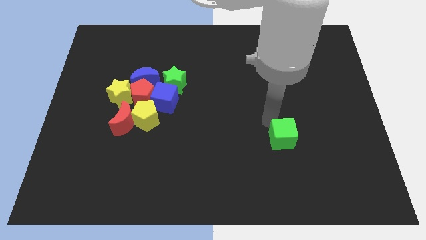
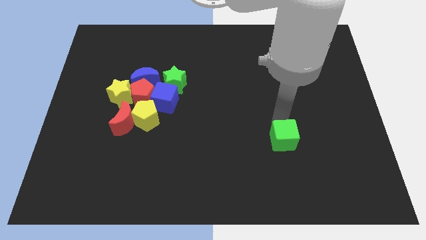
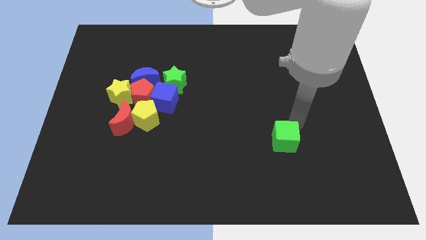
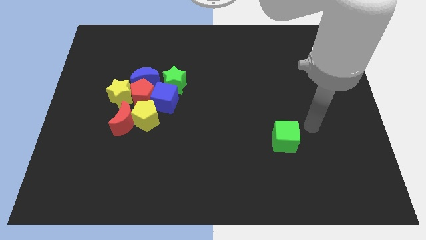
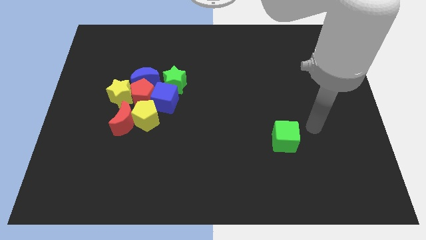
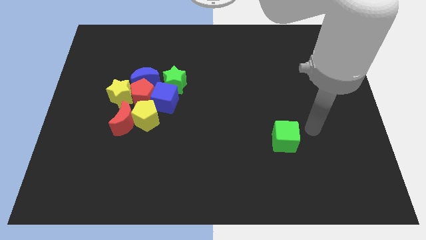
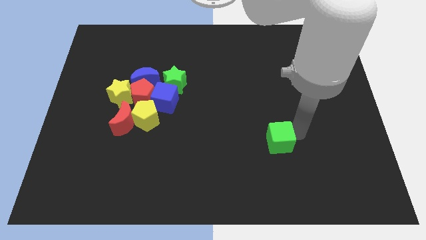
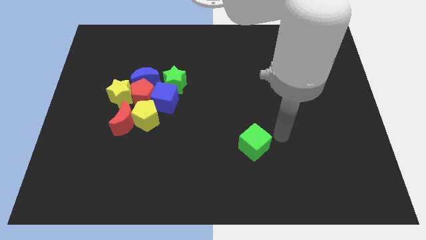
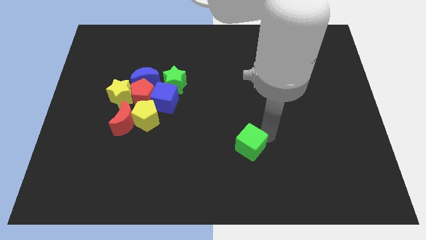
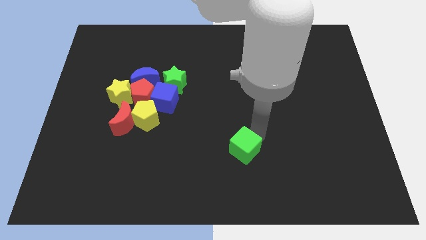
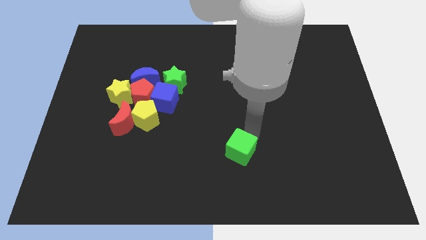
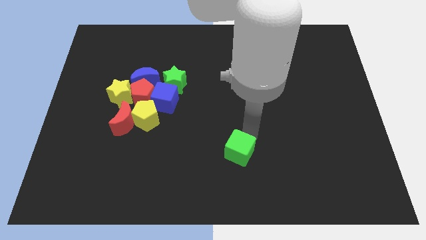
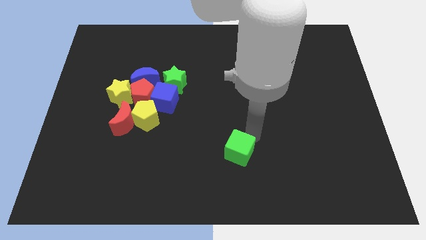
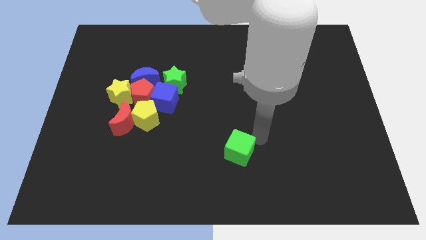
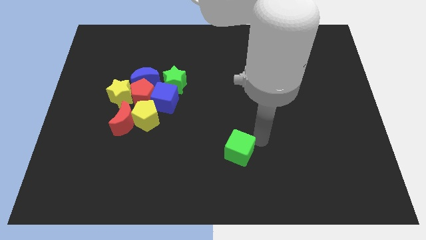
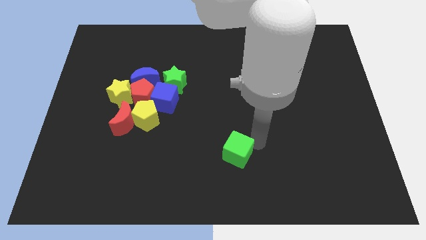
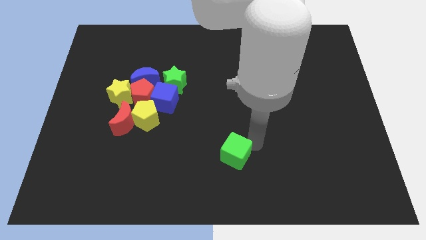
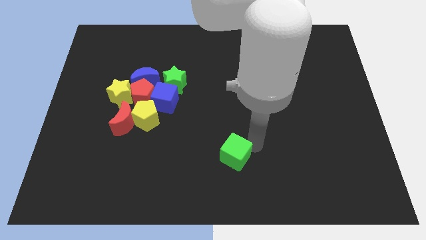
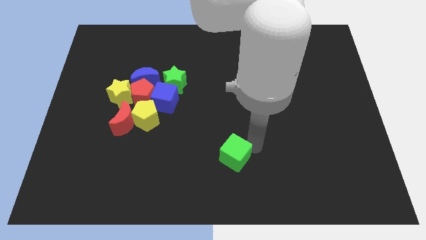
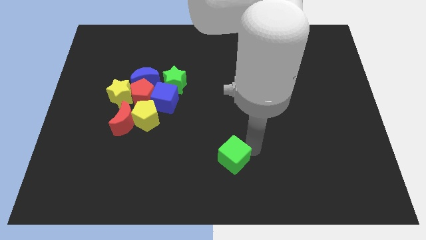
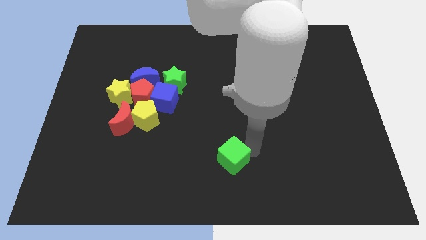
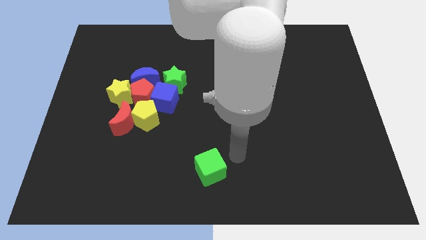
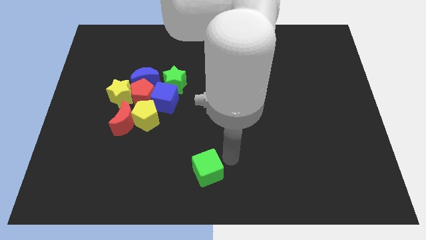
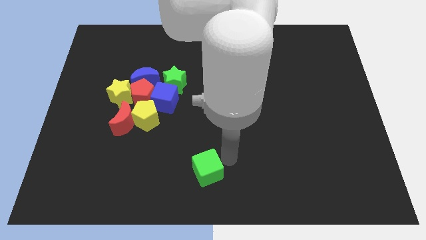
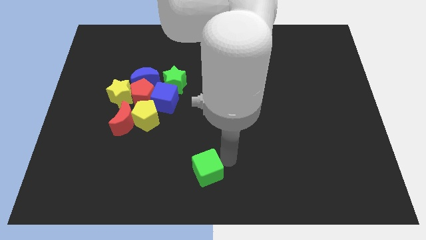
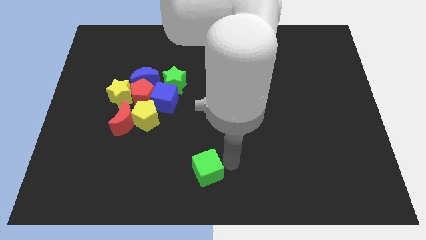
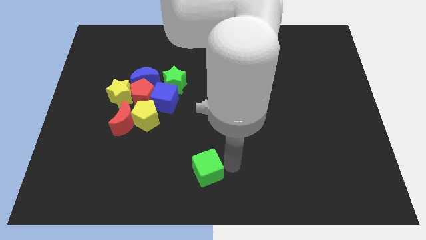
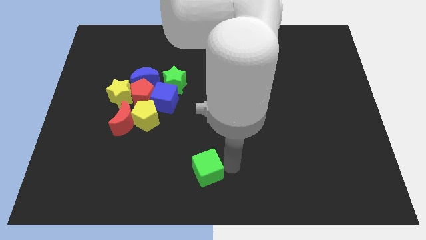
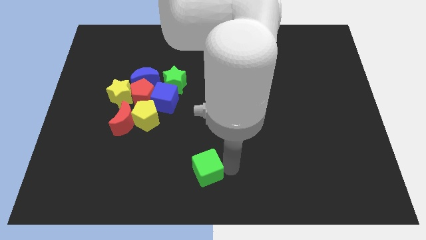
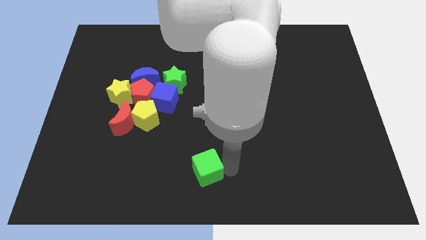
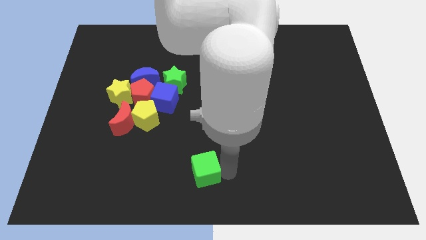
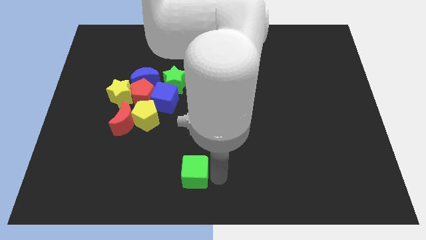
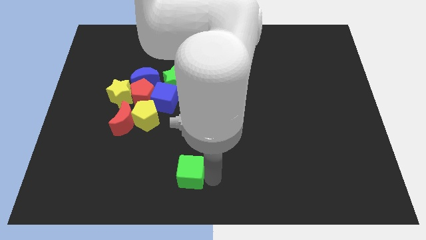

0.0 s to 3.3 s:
push green cube below blue cube

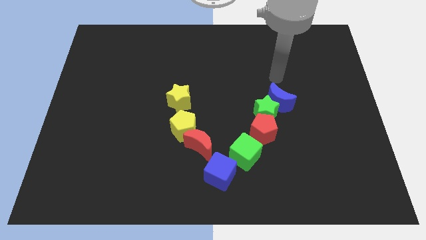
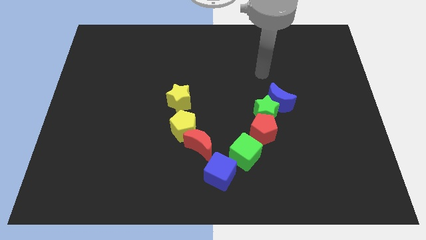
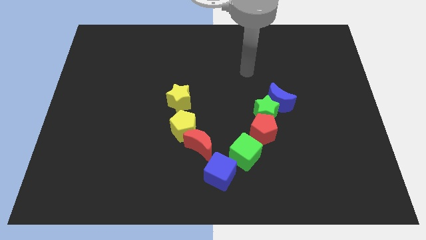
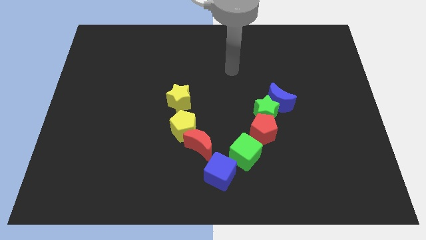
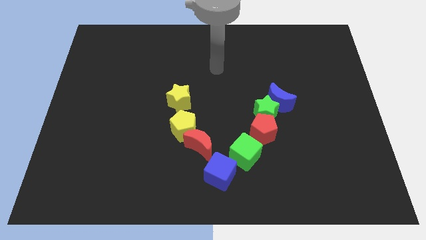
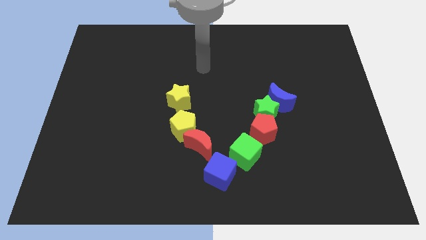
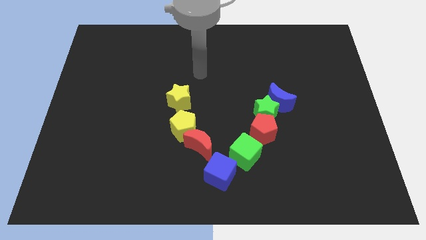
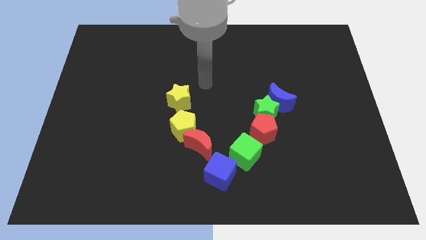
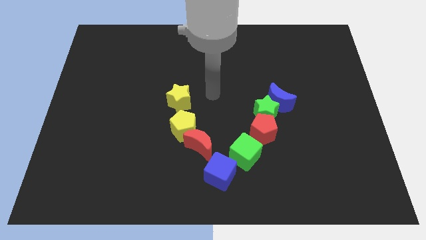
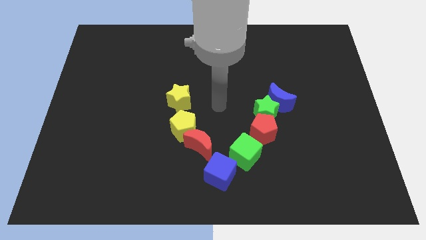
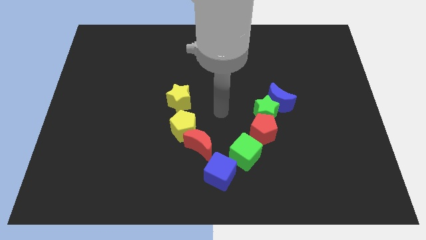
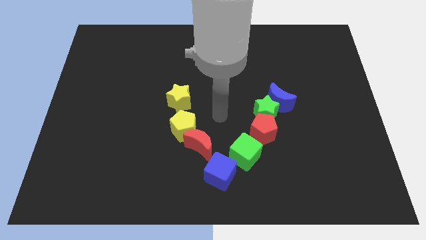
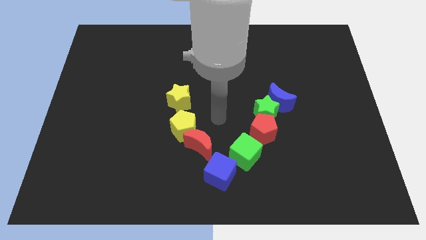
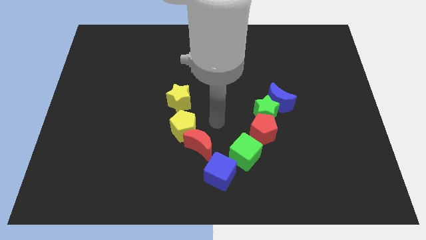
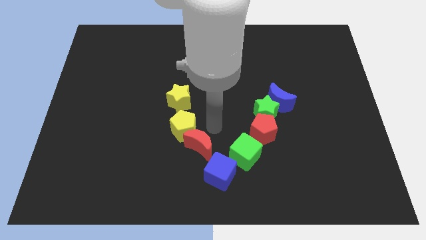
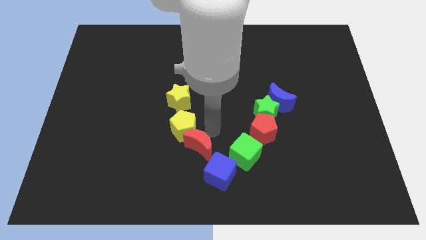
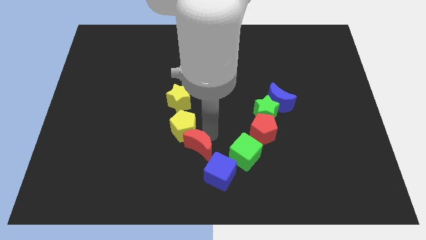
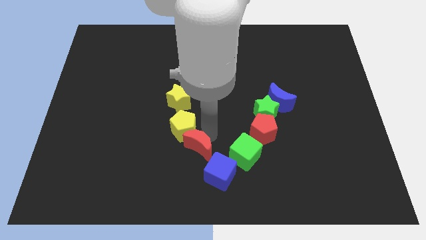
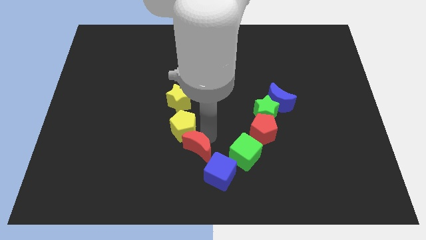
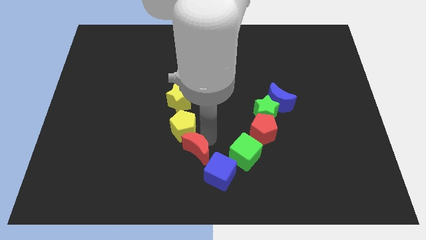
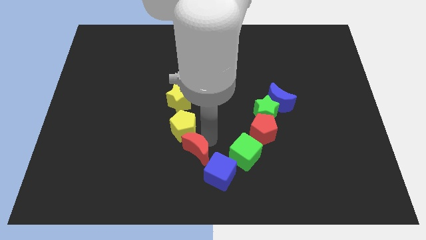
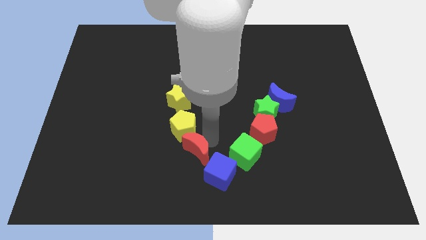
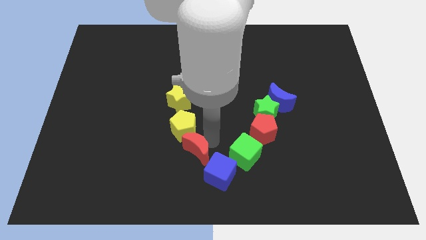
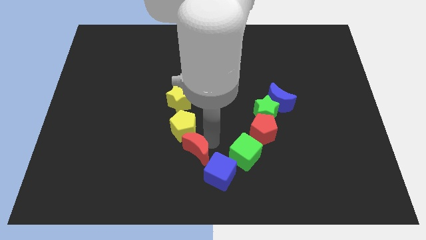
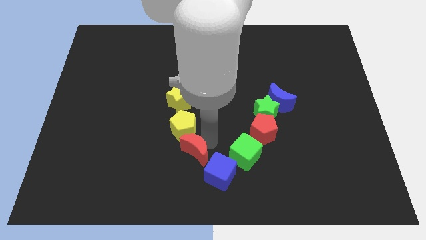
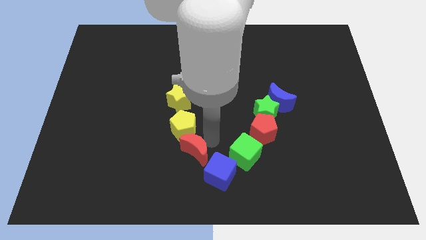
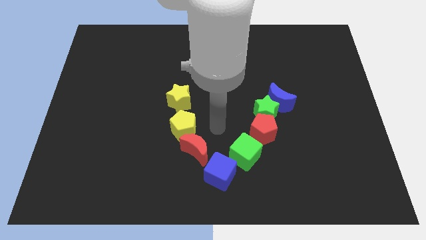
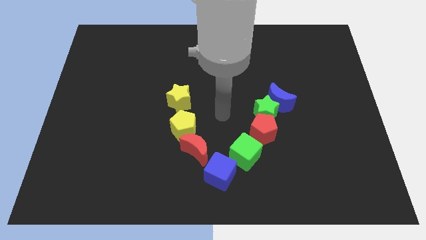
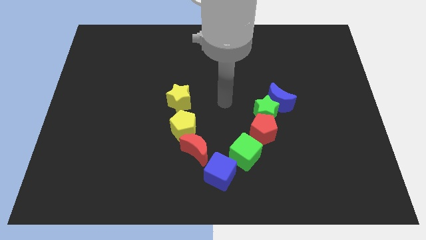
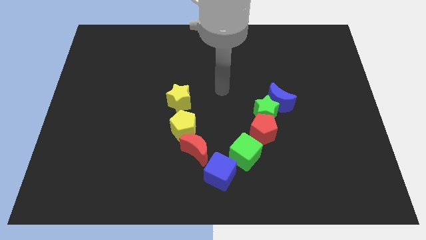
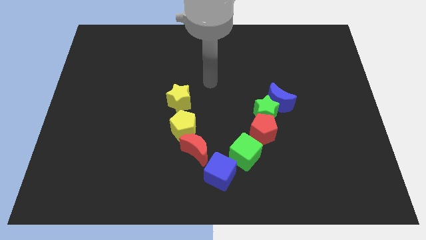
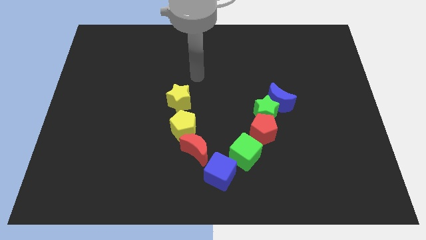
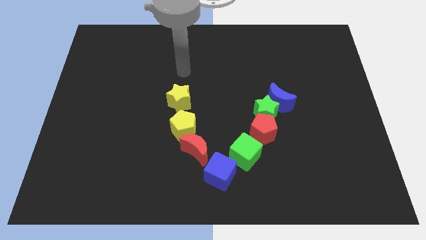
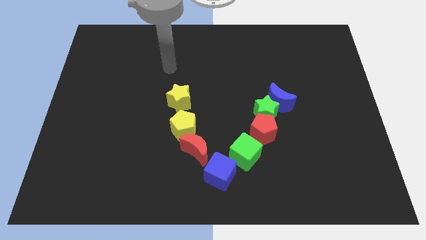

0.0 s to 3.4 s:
slightly push the red crescent to the left of the board

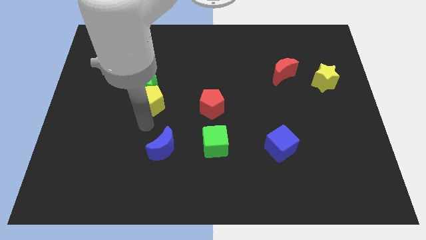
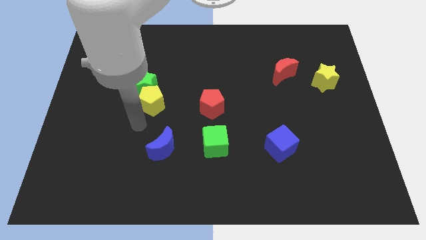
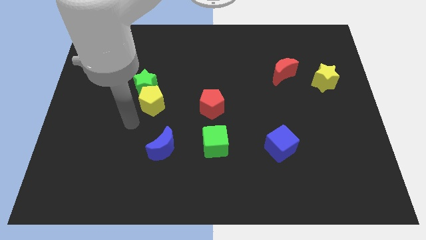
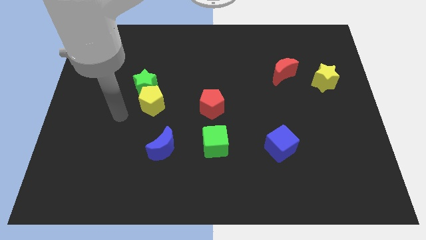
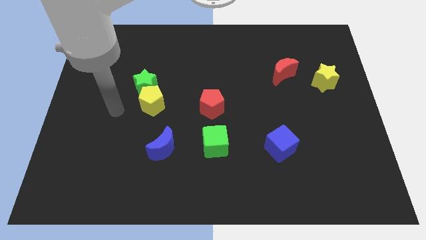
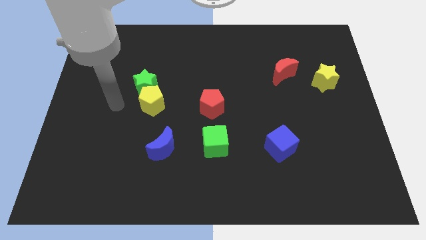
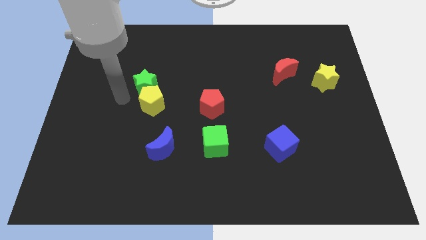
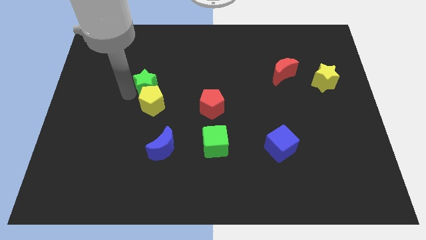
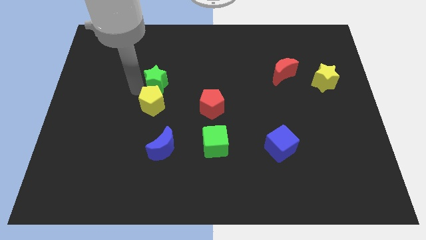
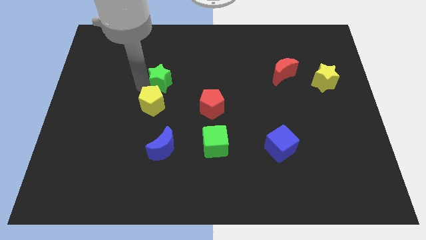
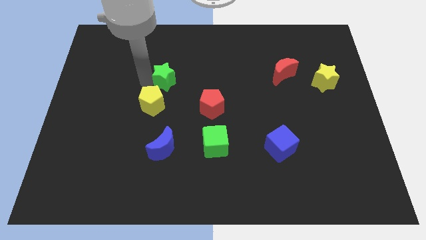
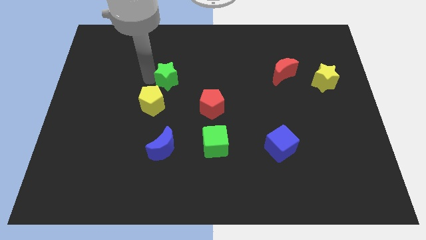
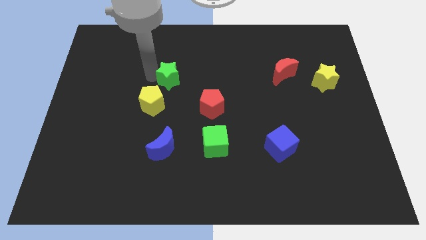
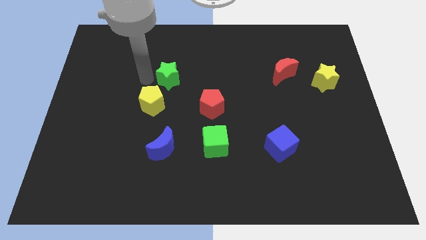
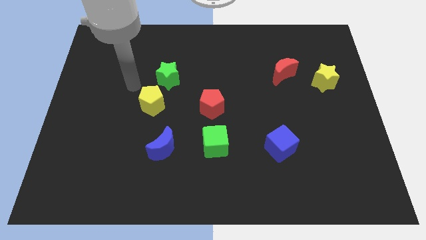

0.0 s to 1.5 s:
push the green star slightly to the right

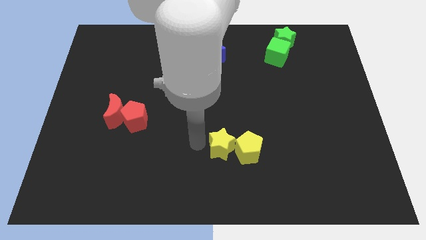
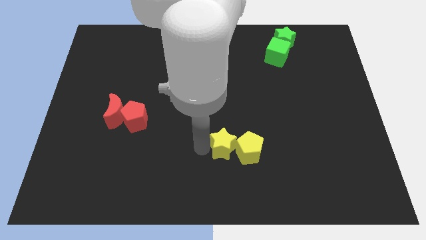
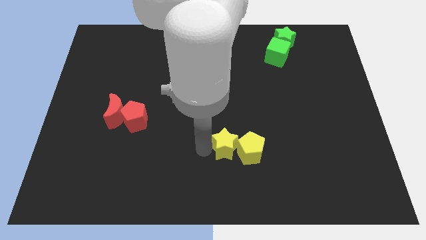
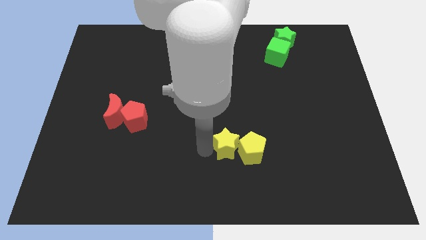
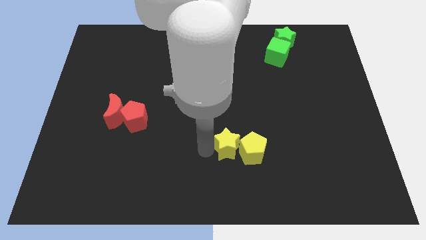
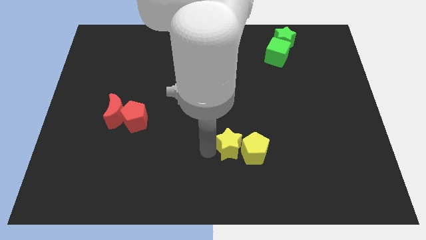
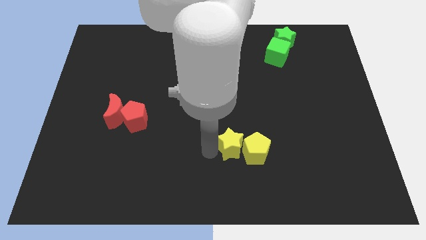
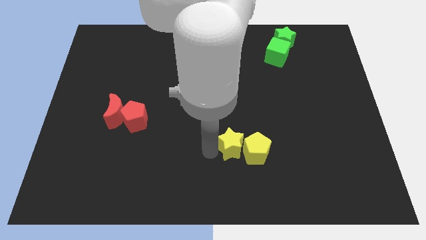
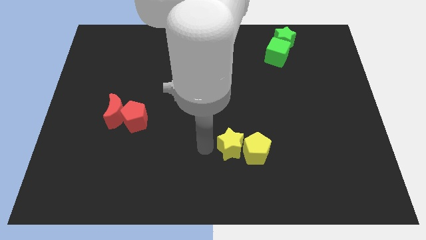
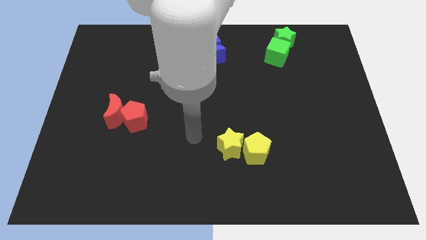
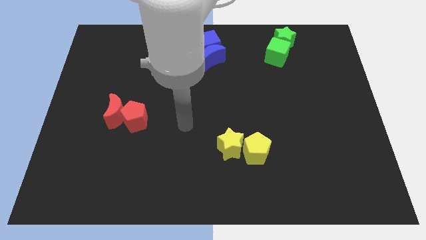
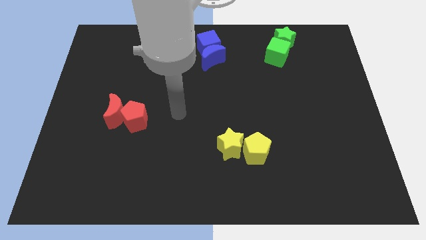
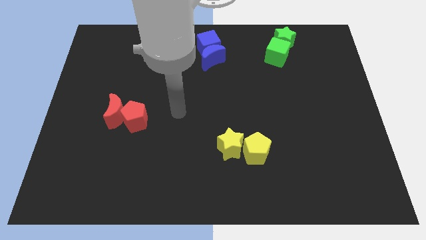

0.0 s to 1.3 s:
move the yellow star to the left side of the yellow pentagon
